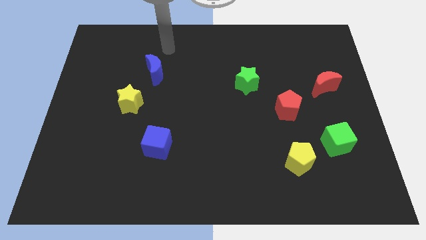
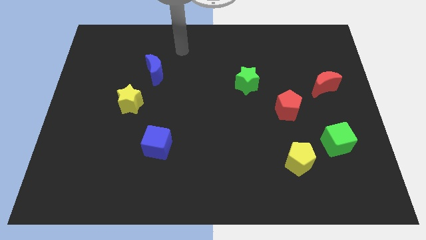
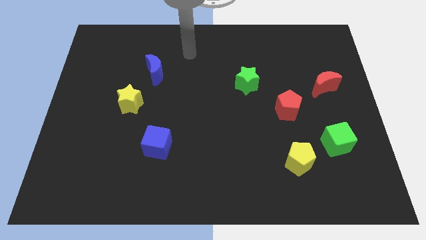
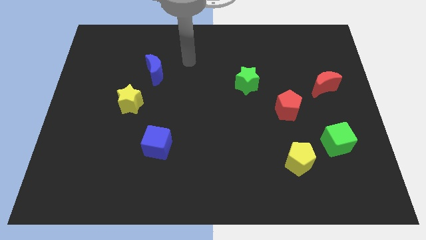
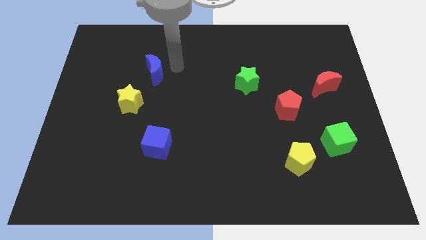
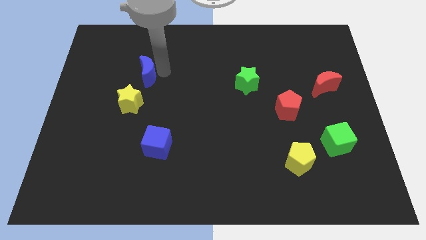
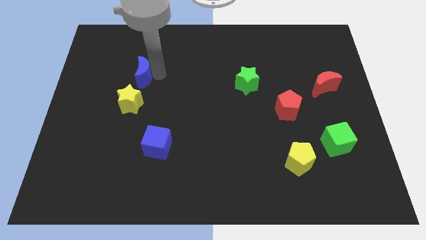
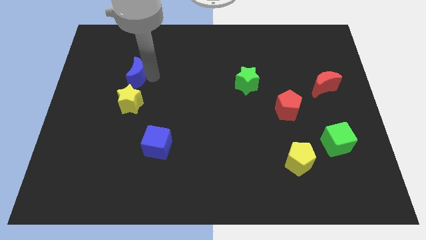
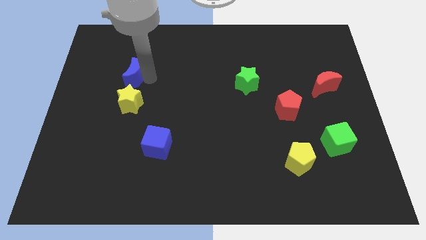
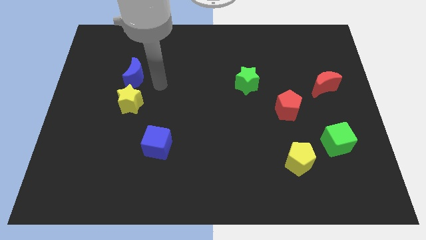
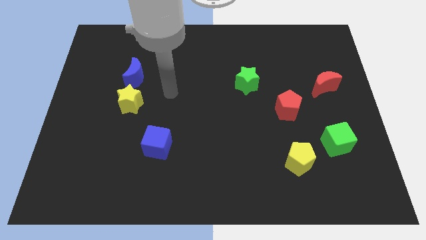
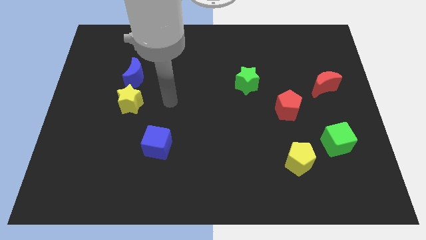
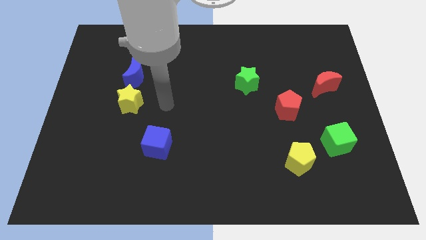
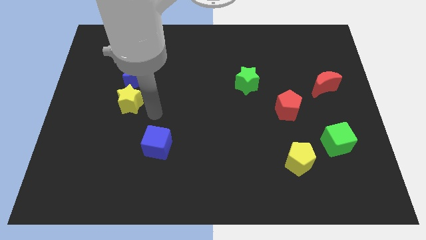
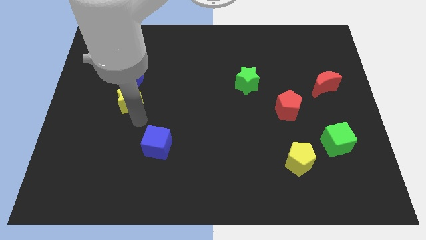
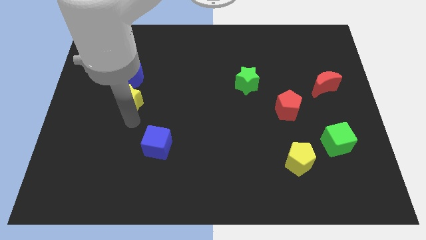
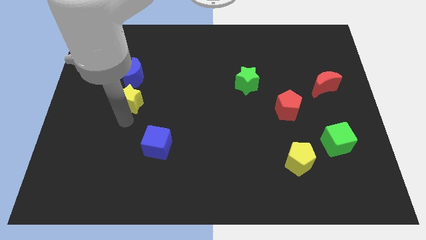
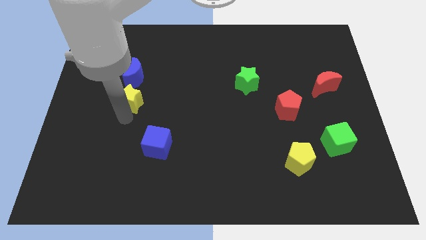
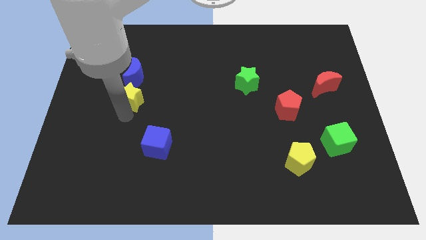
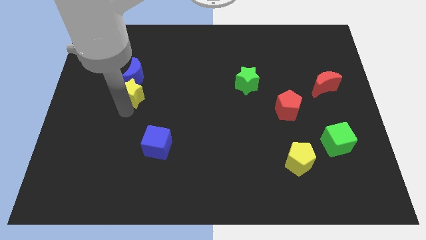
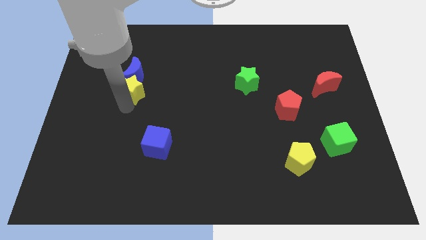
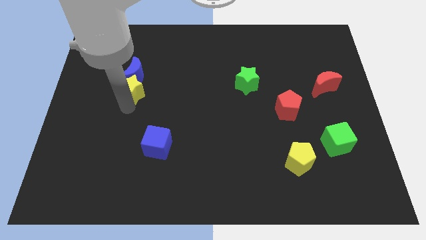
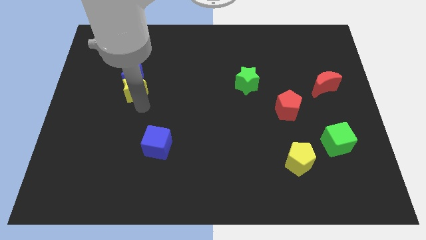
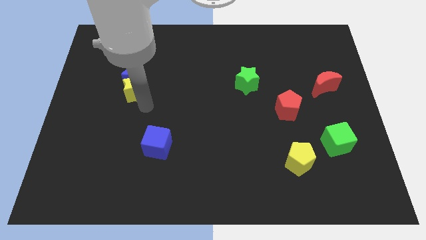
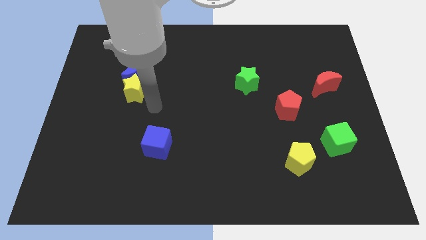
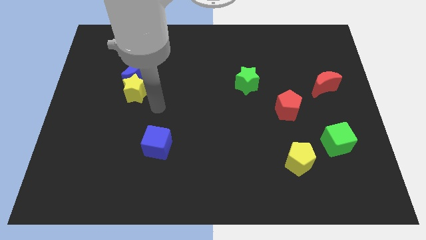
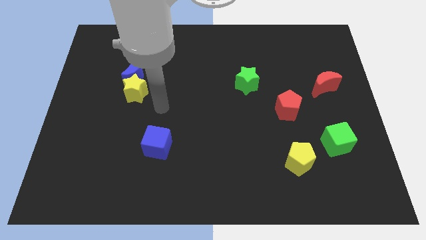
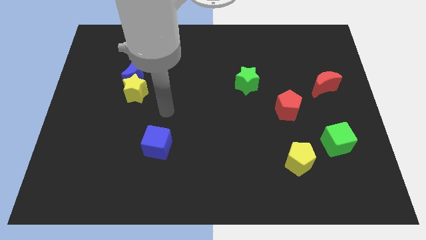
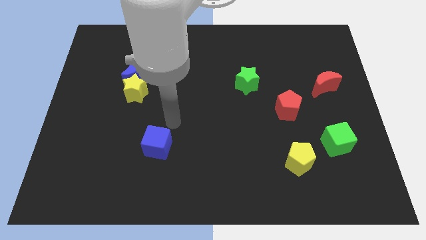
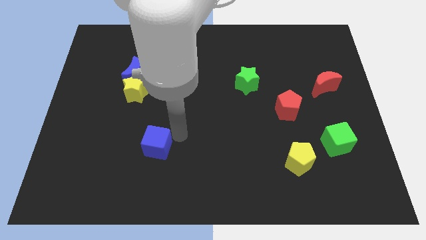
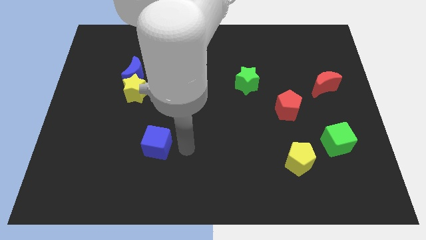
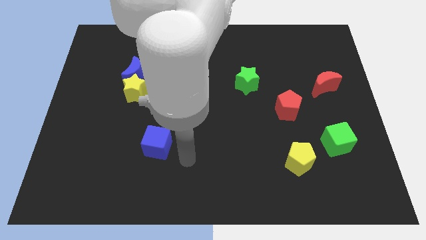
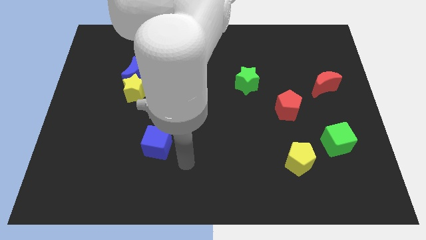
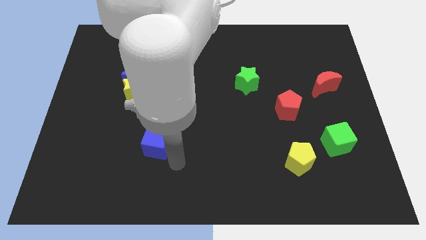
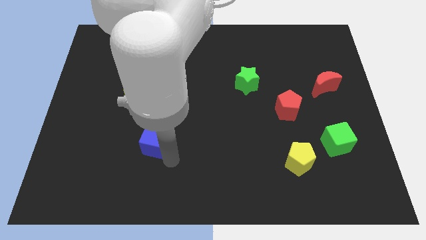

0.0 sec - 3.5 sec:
push the yellow star into the blue moon

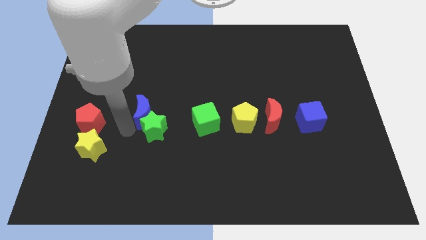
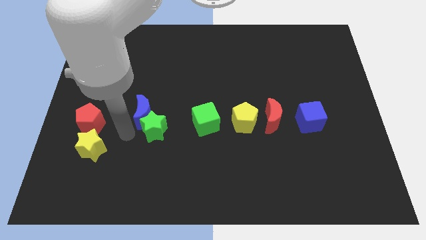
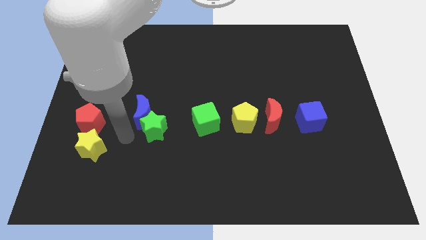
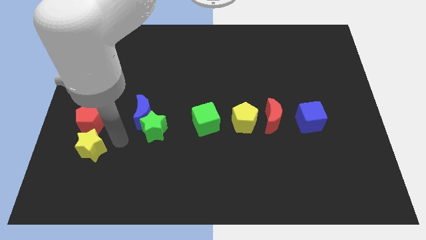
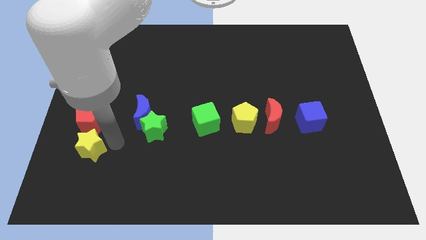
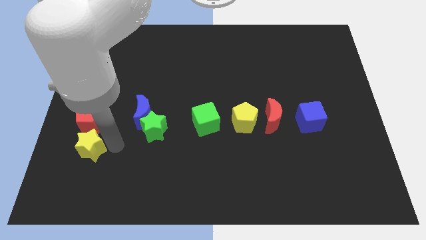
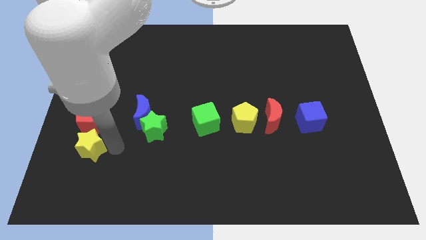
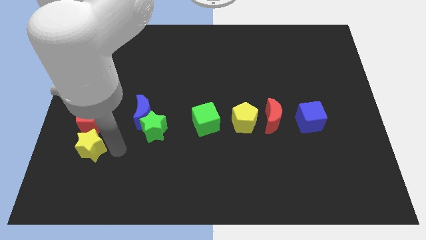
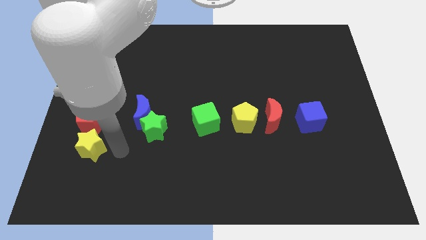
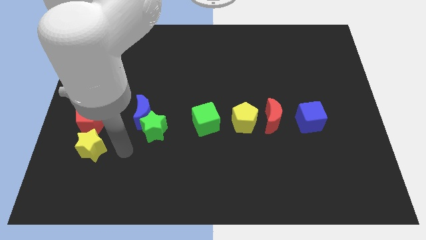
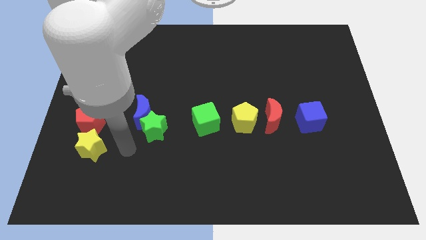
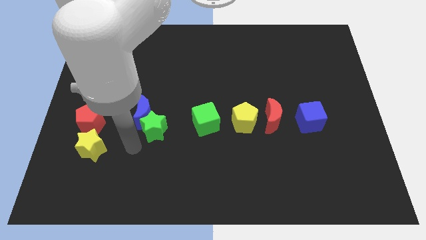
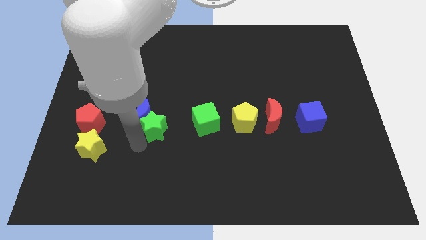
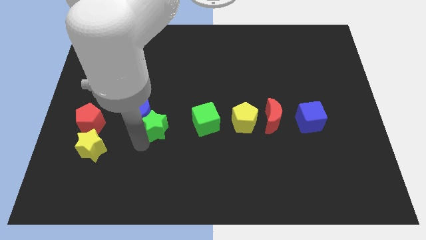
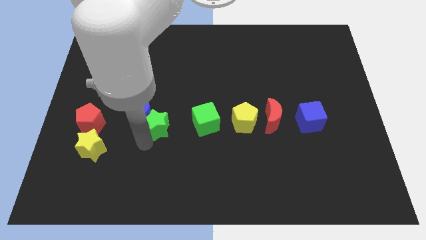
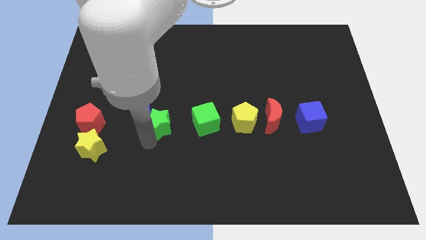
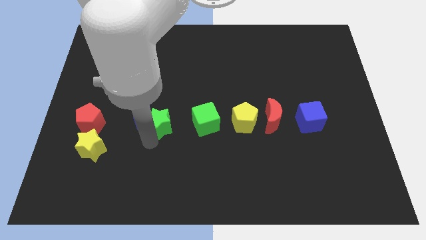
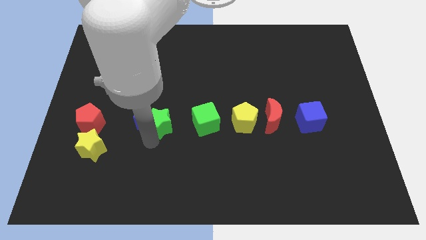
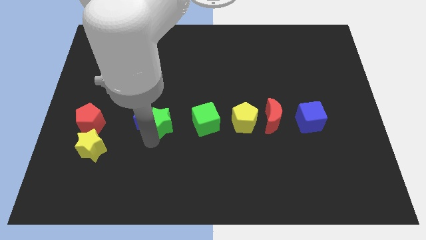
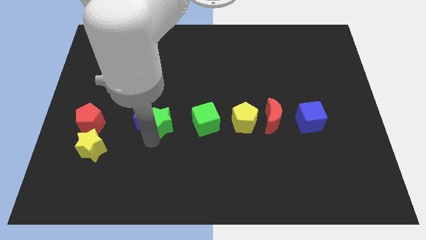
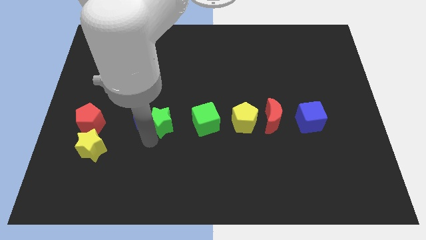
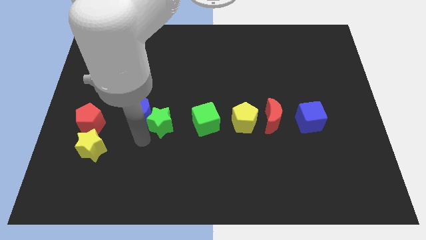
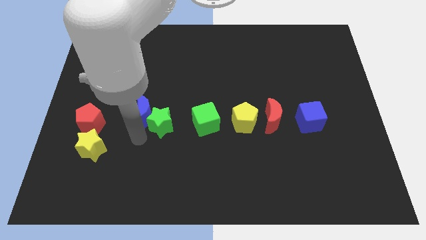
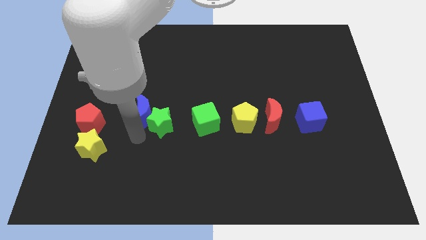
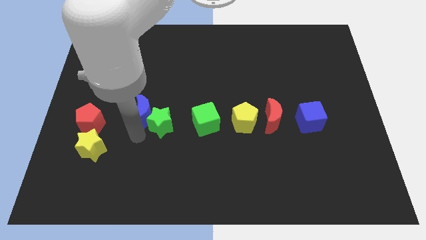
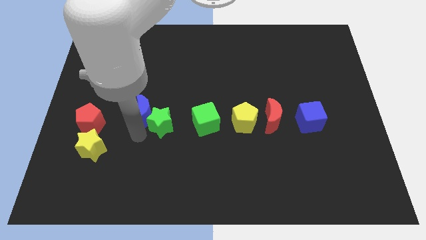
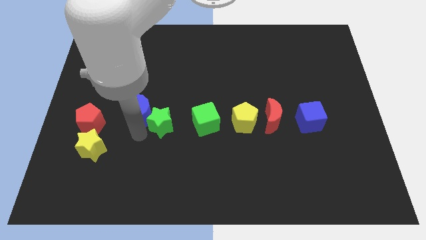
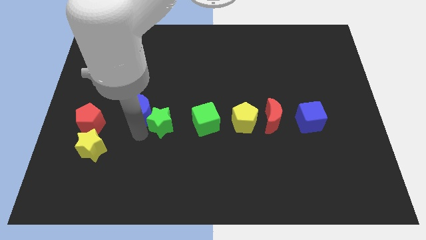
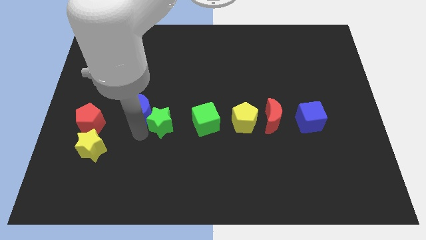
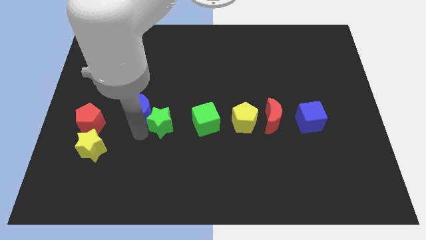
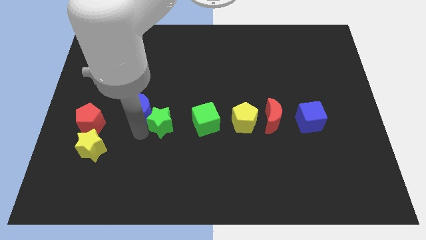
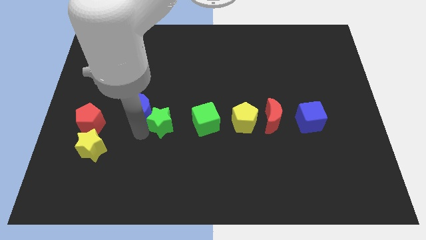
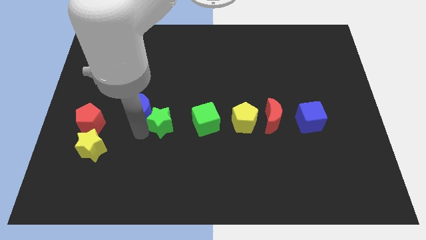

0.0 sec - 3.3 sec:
push the green star slightly to the top

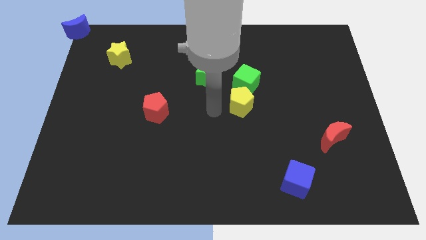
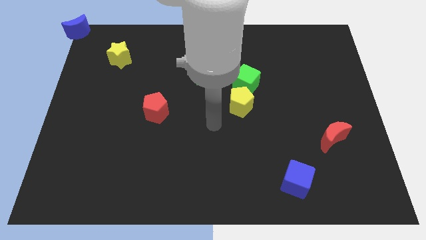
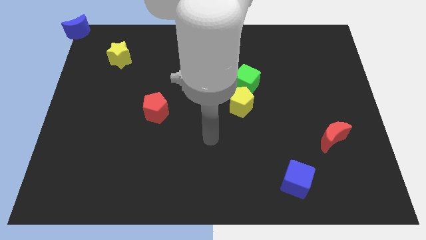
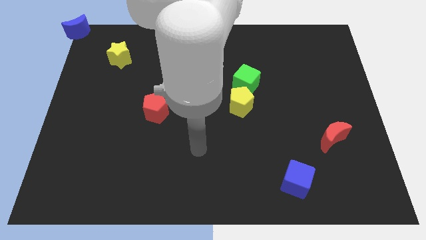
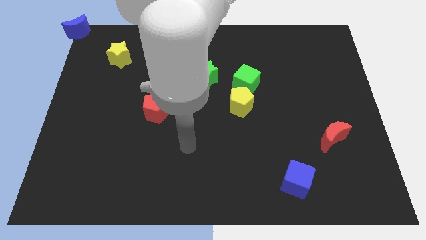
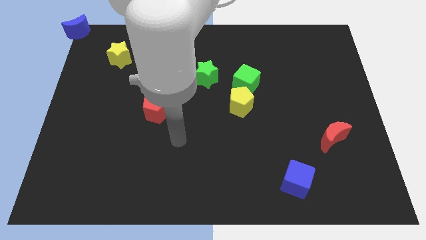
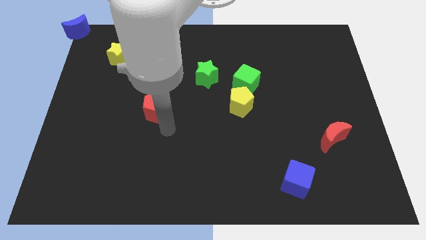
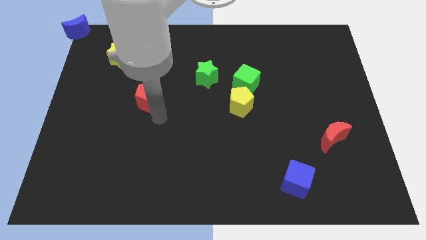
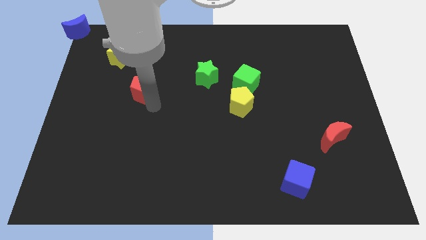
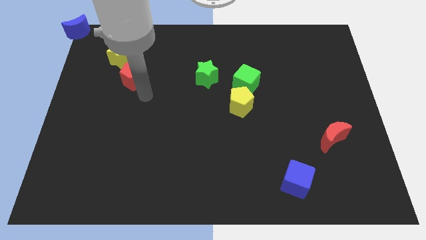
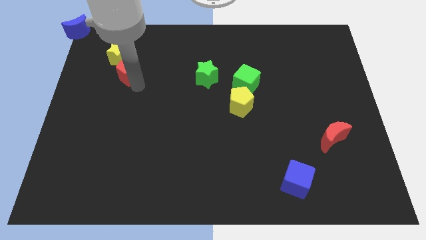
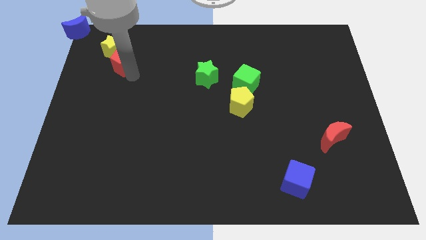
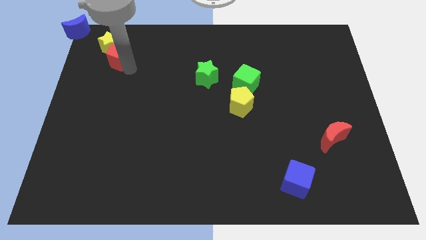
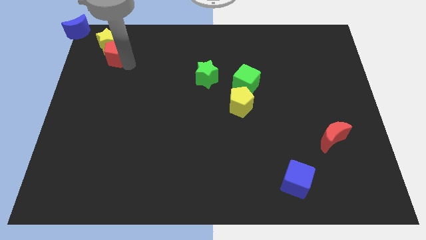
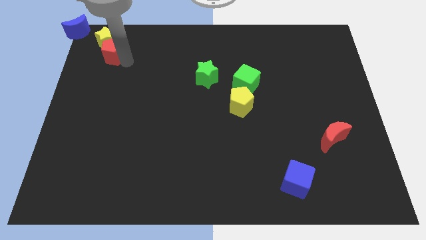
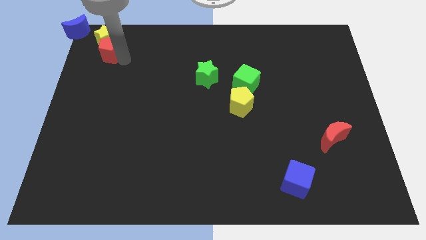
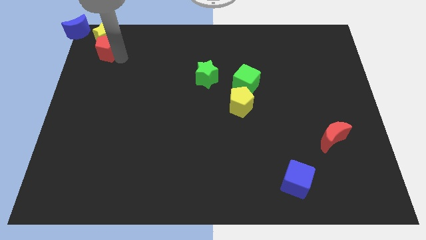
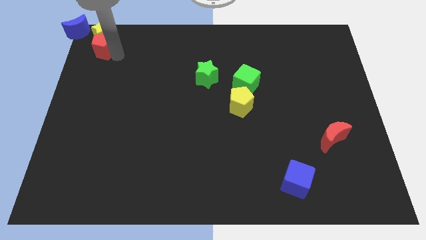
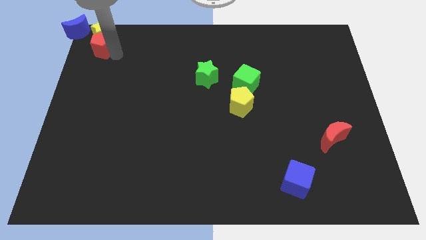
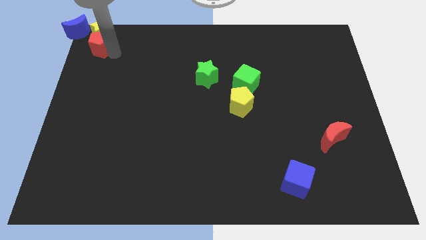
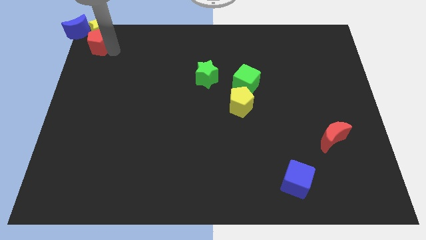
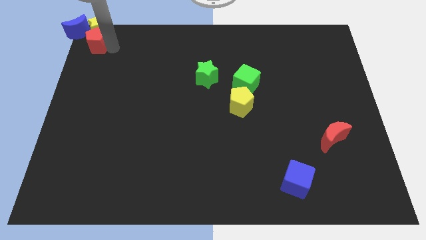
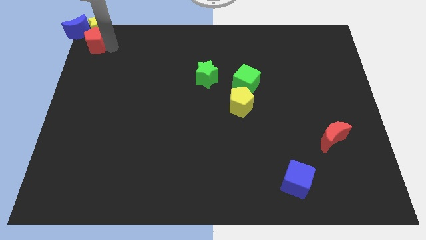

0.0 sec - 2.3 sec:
push the yellow star and red pentagon towards the top left corner of the board
